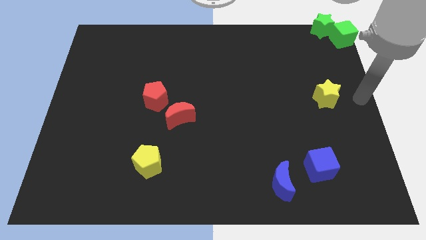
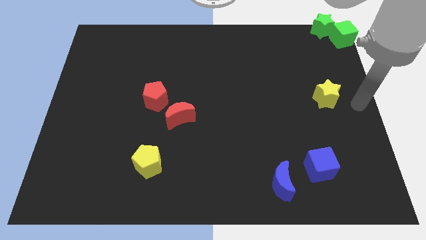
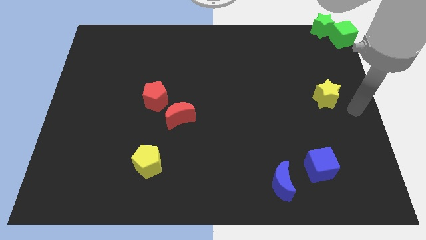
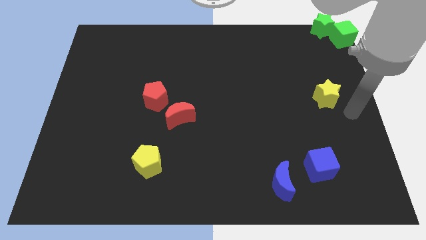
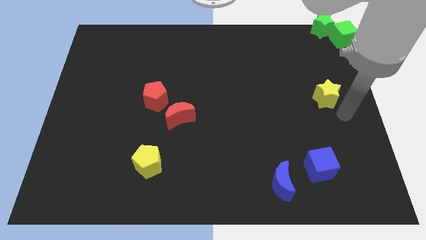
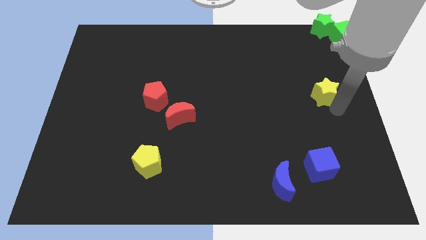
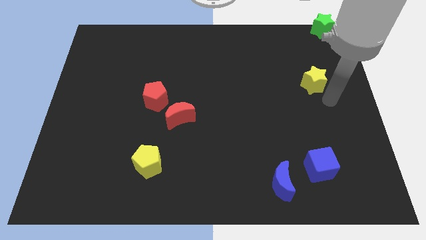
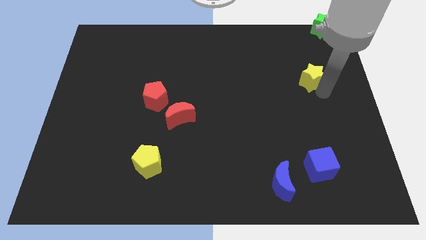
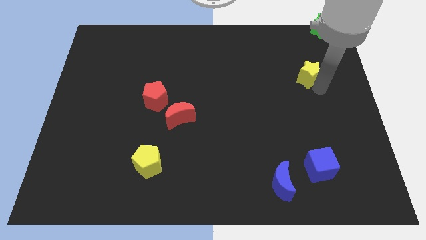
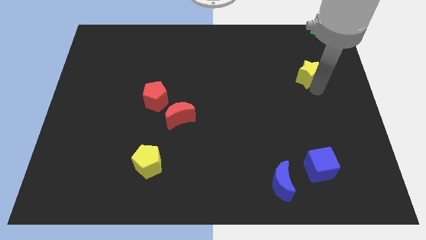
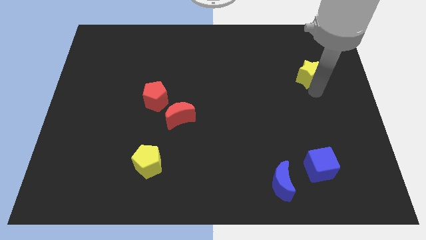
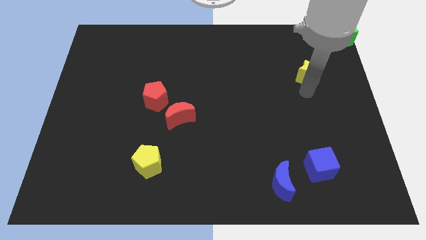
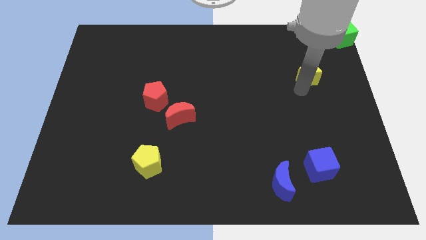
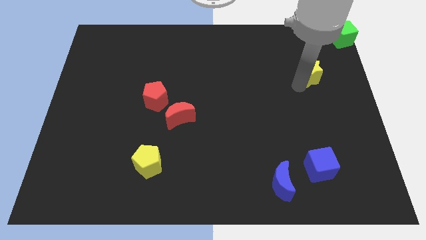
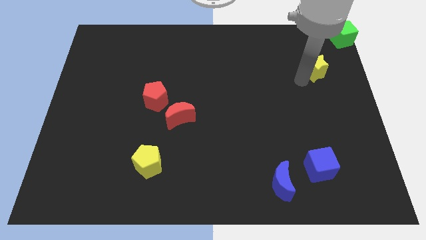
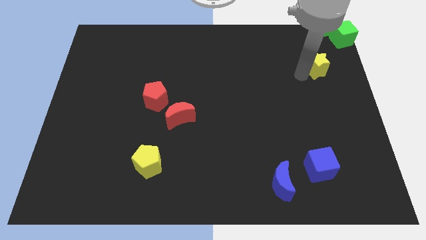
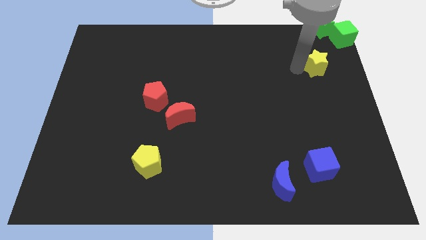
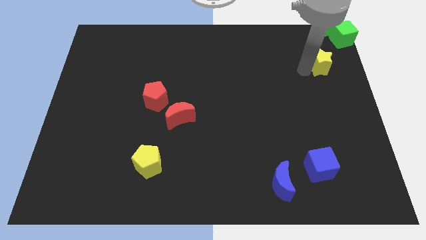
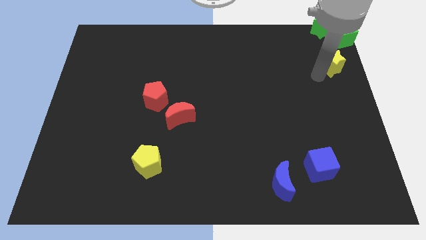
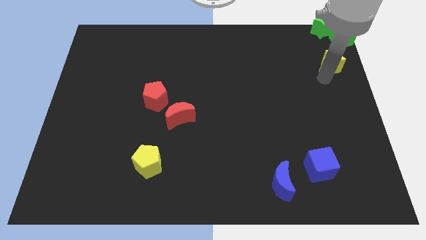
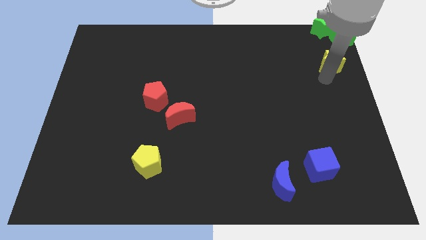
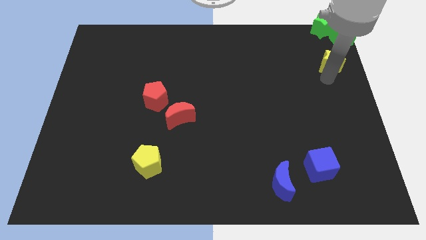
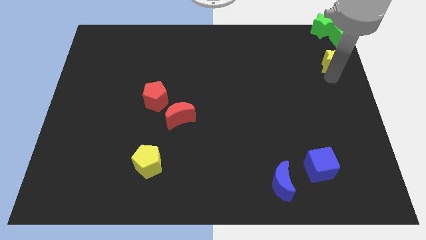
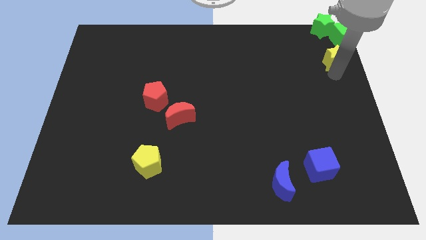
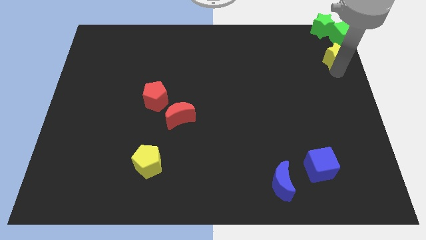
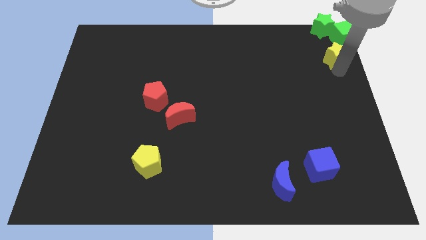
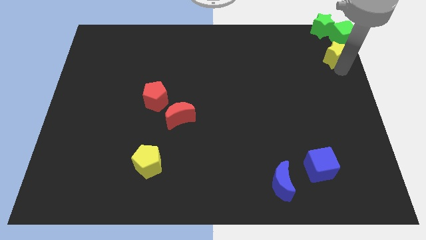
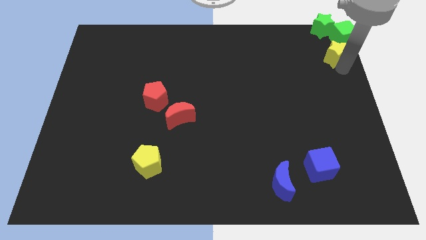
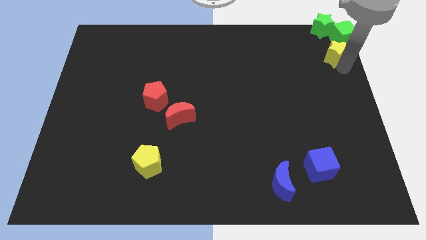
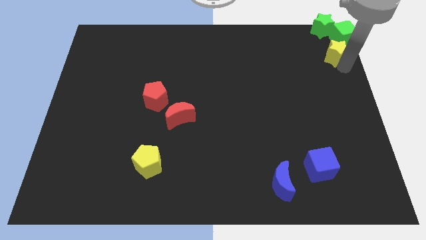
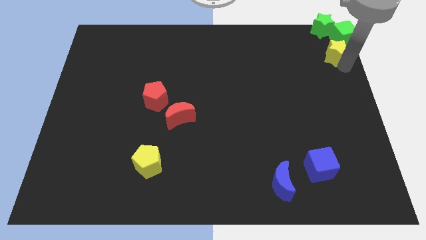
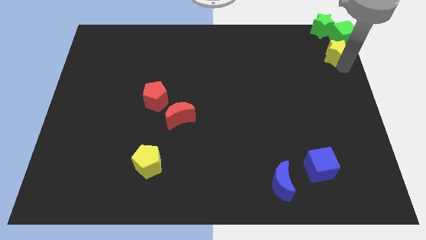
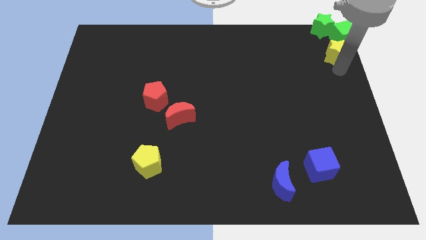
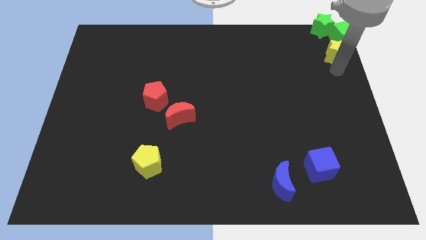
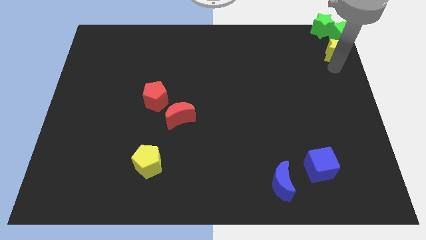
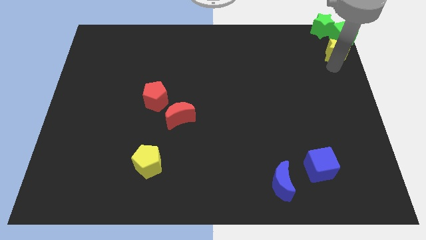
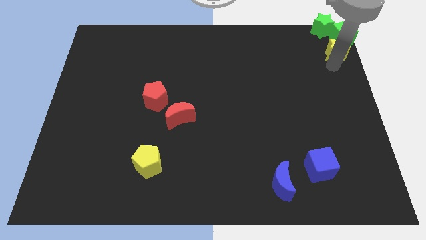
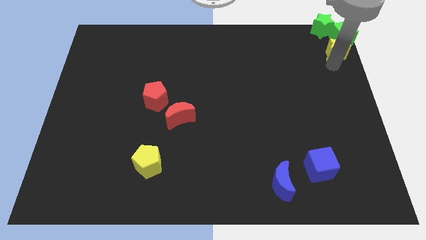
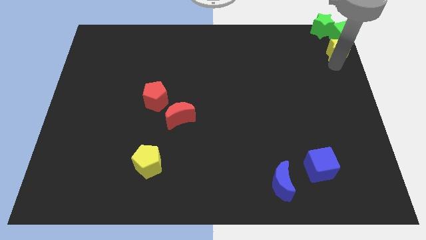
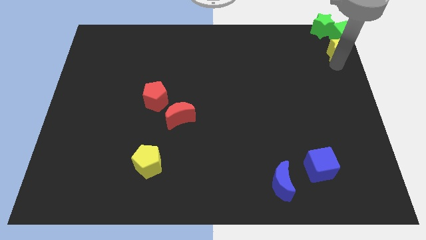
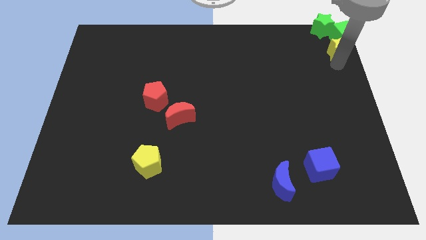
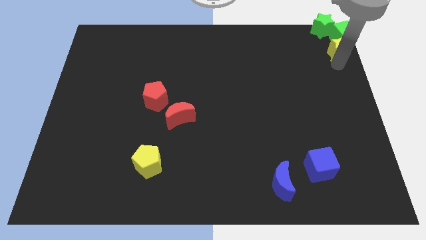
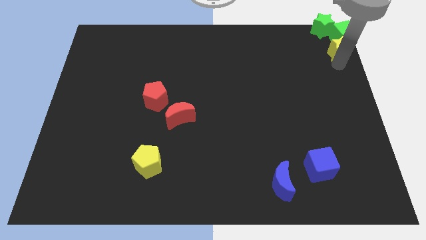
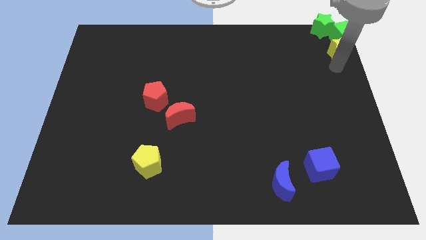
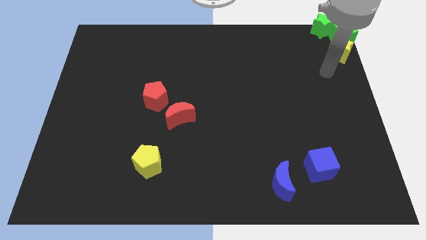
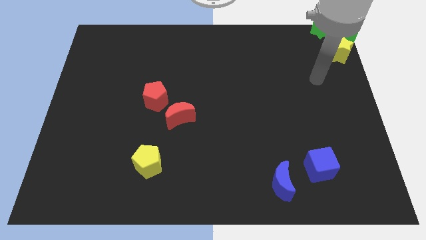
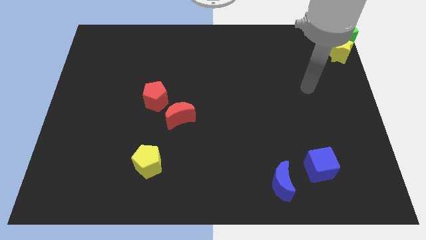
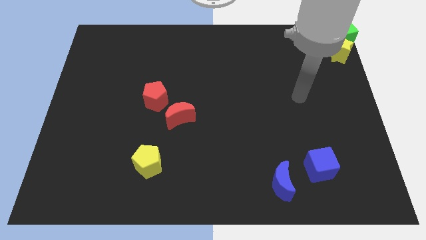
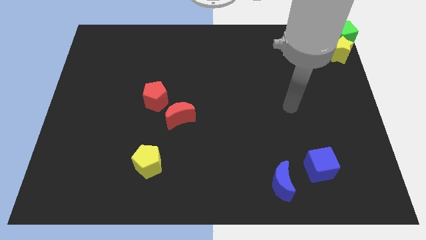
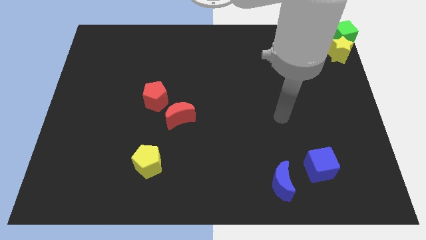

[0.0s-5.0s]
place the yellow star into a green cube

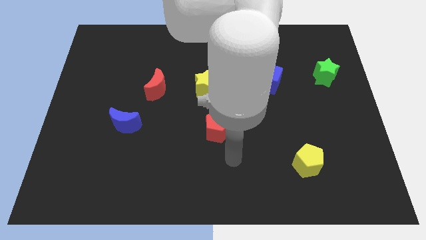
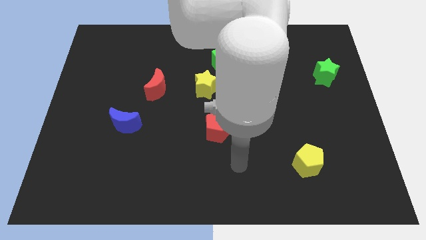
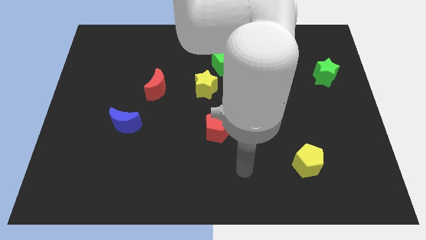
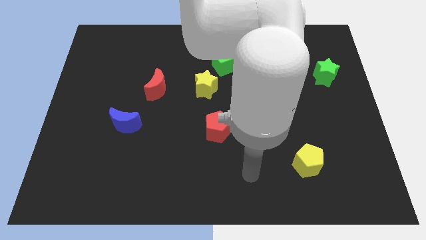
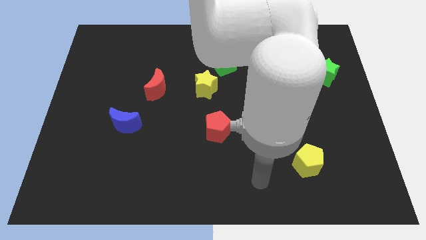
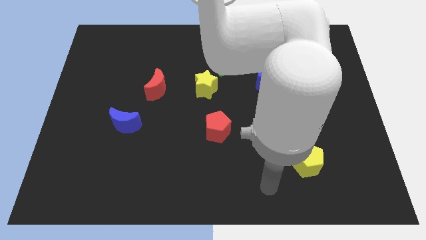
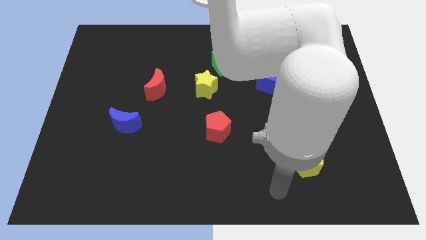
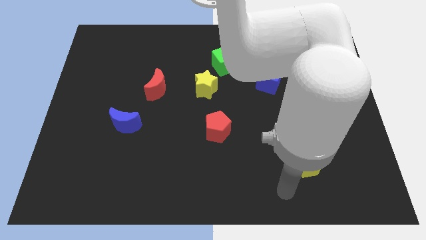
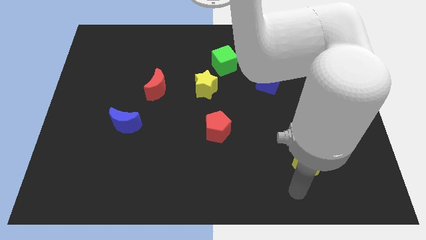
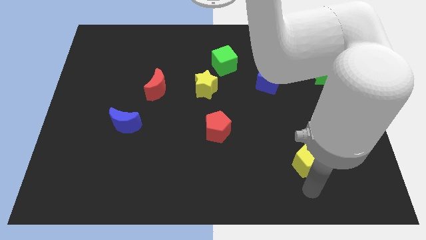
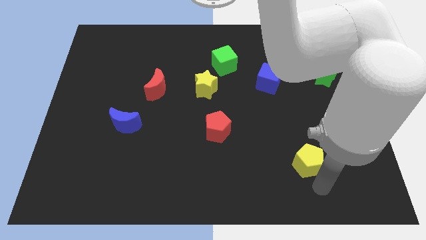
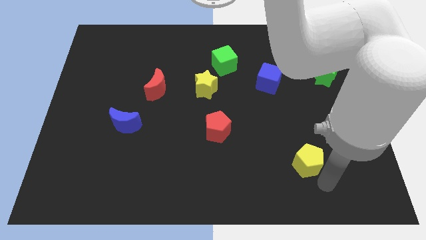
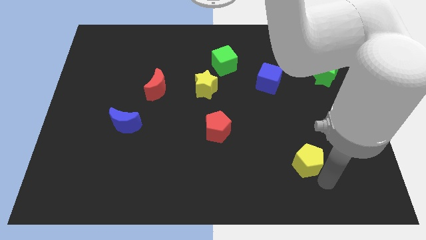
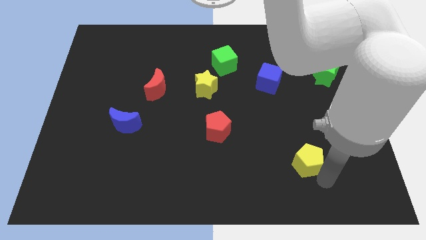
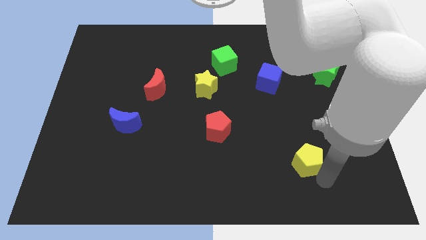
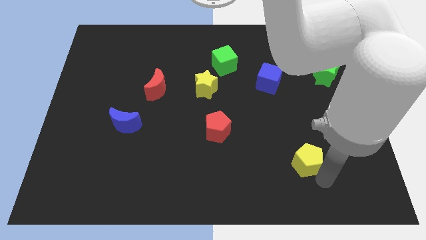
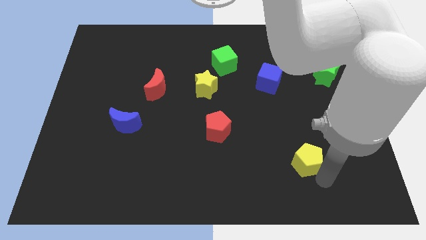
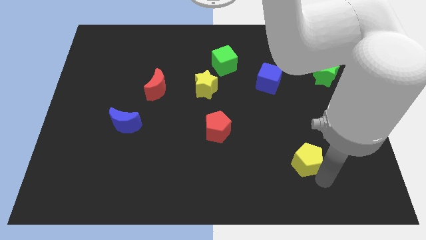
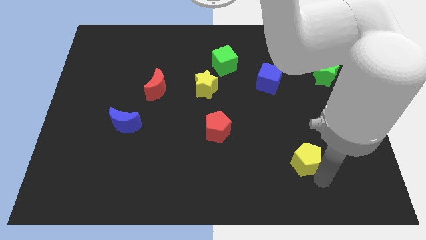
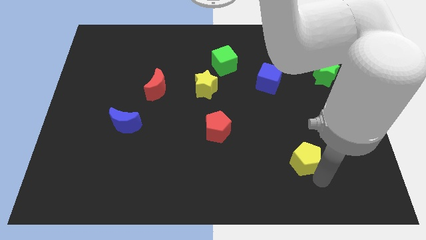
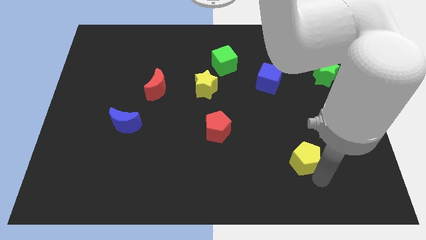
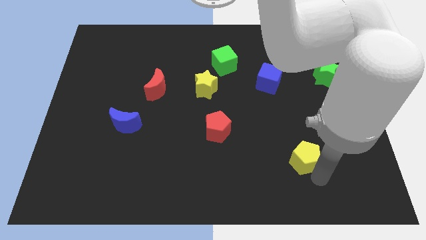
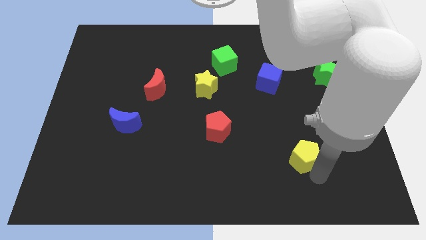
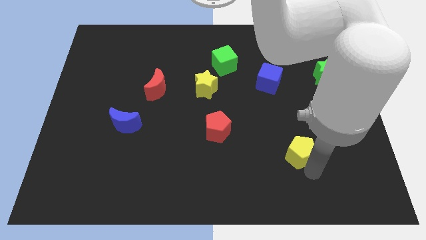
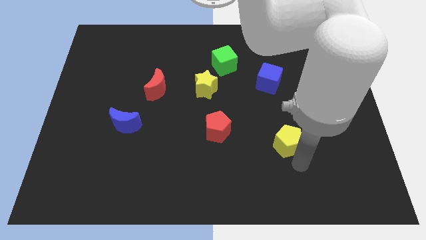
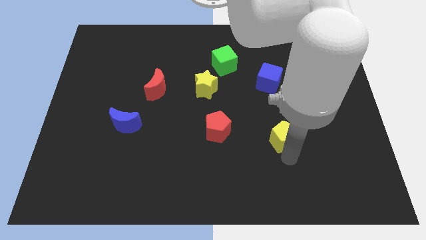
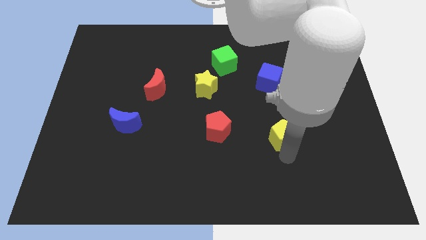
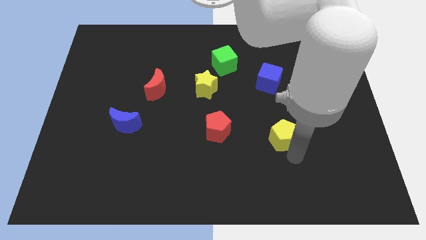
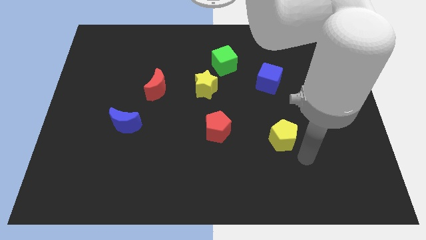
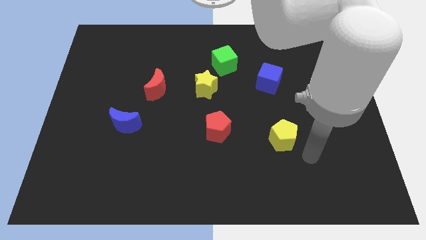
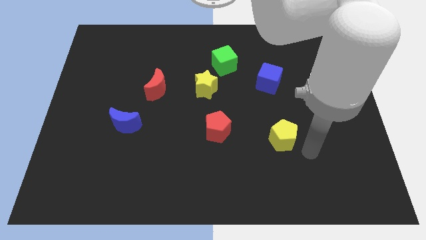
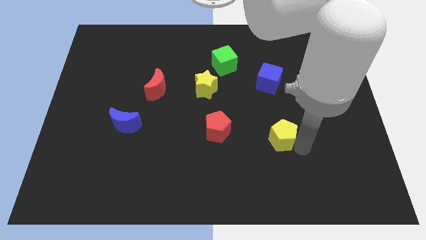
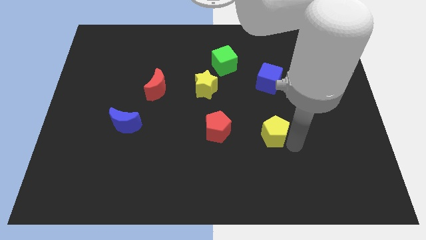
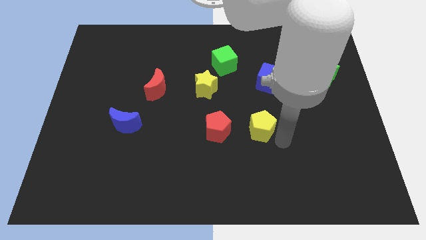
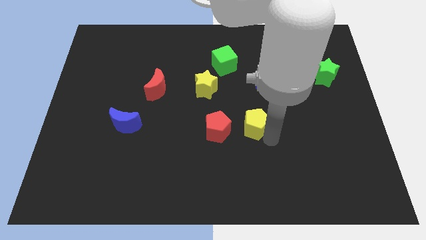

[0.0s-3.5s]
move yellow pentagon to the right the red pentagon

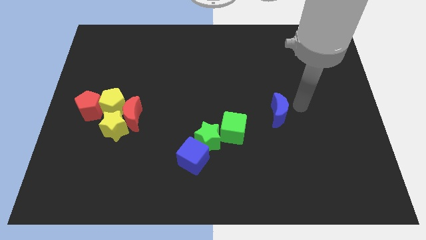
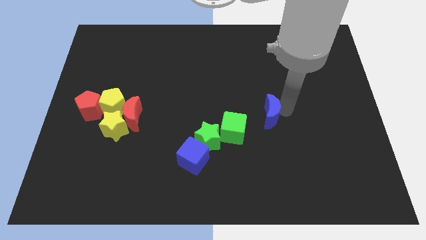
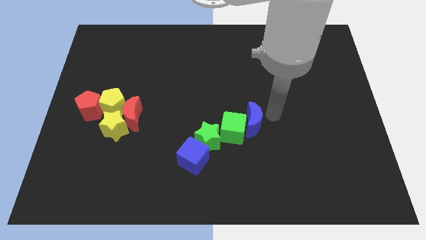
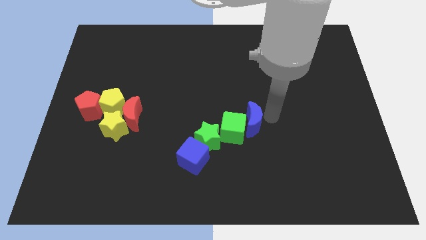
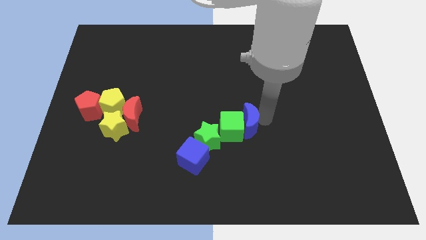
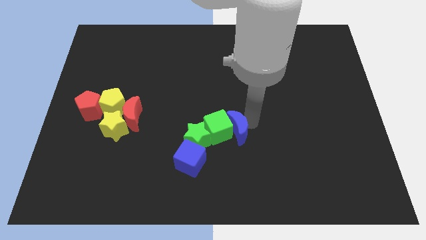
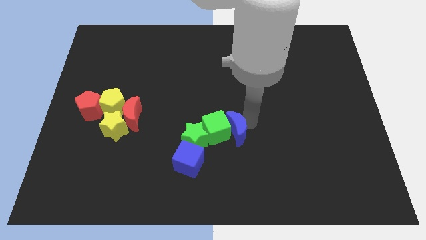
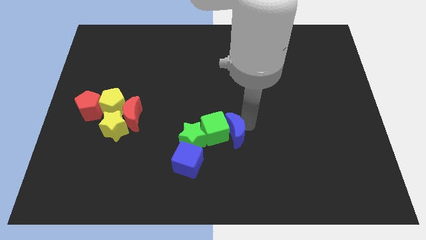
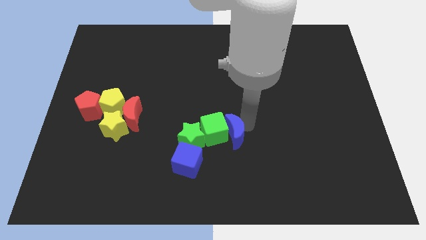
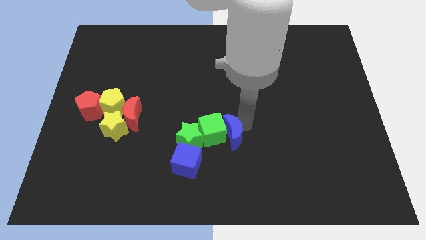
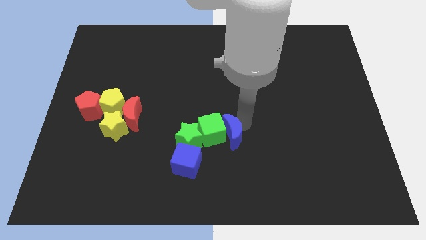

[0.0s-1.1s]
push the blue moon into the green cube
